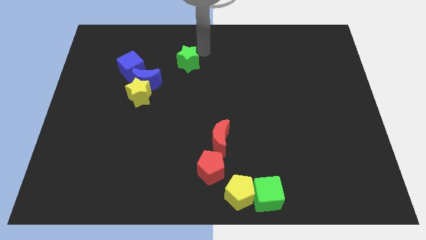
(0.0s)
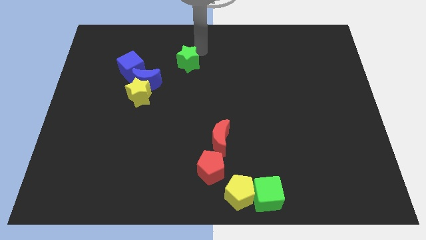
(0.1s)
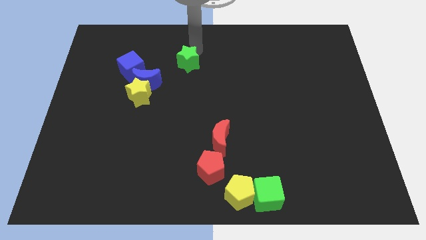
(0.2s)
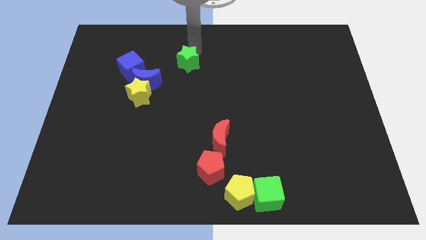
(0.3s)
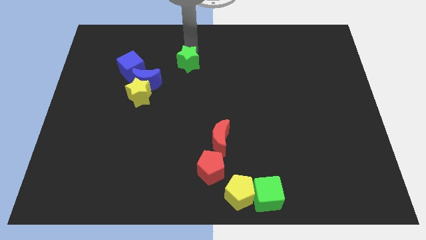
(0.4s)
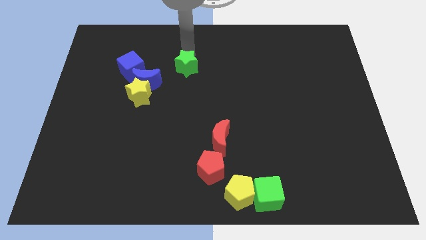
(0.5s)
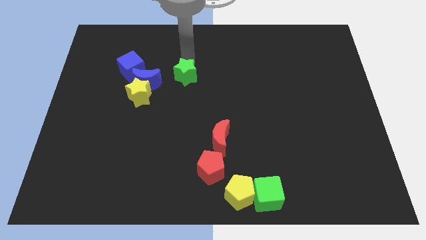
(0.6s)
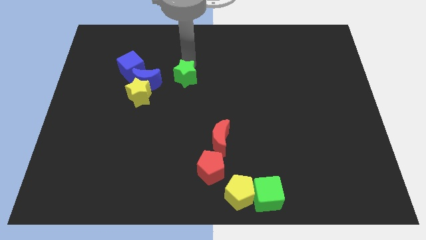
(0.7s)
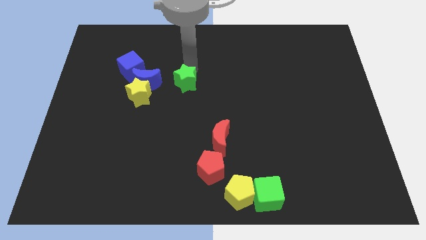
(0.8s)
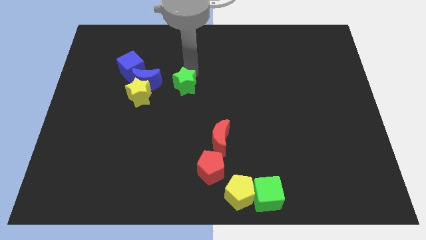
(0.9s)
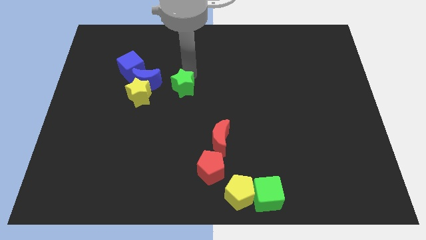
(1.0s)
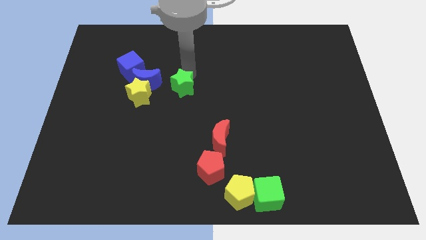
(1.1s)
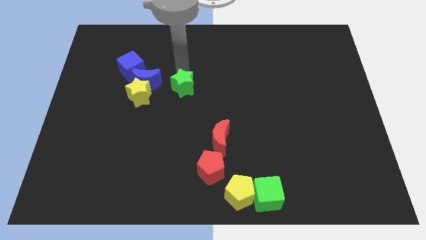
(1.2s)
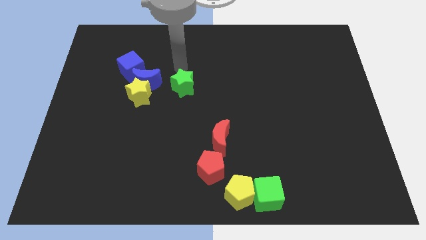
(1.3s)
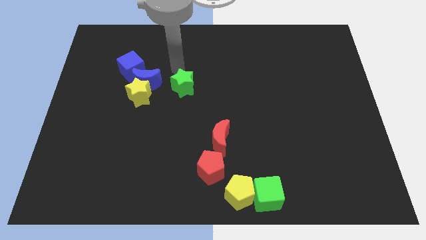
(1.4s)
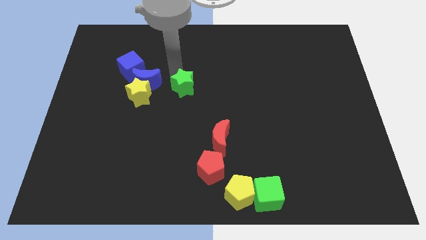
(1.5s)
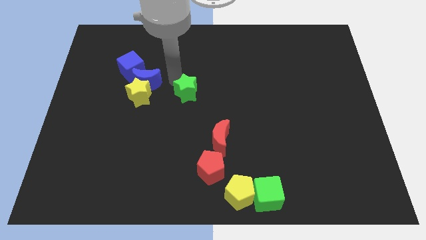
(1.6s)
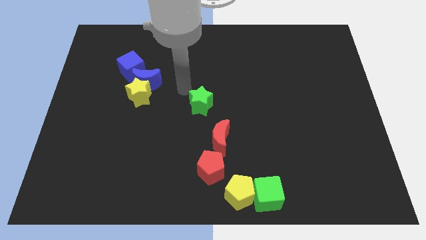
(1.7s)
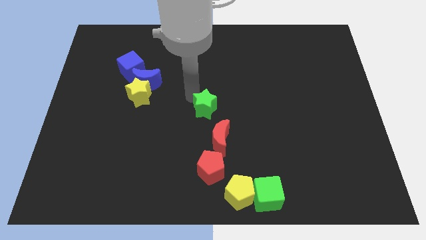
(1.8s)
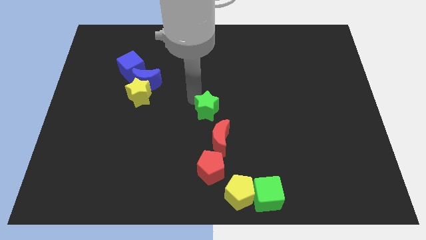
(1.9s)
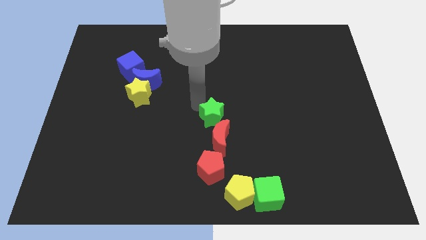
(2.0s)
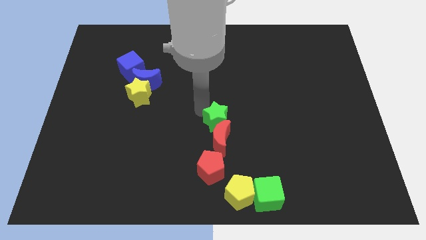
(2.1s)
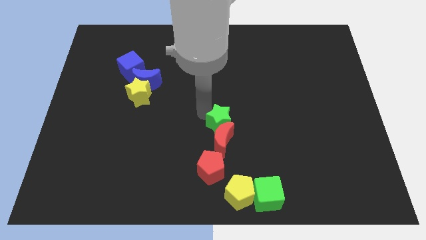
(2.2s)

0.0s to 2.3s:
move green star into top of the red moon

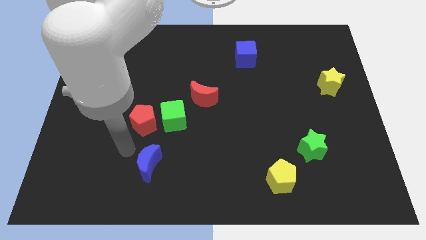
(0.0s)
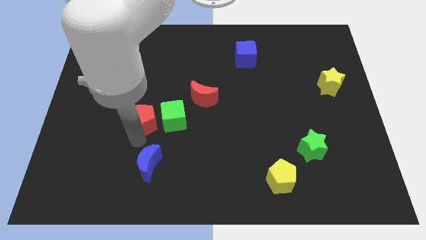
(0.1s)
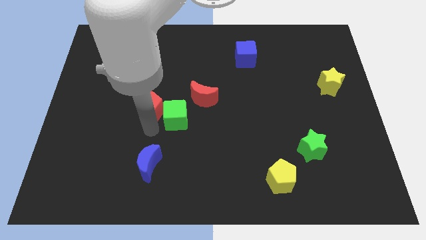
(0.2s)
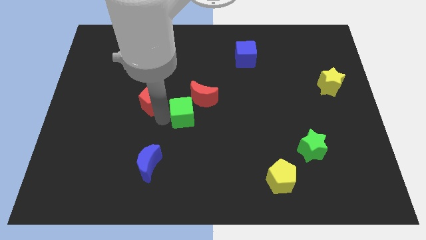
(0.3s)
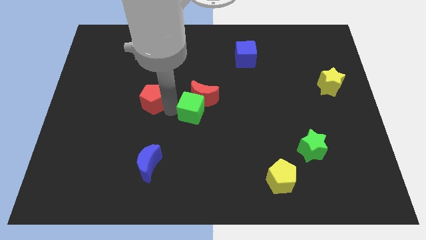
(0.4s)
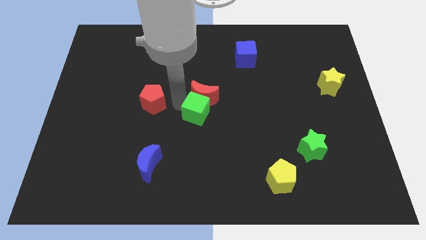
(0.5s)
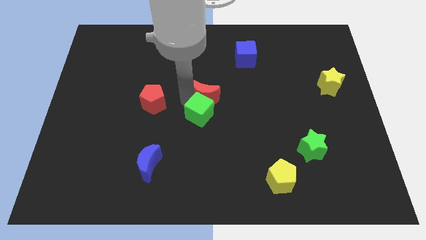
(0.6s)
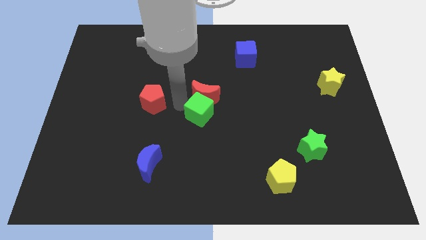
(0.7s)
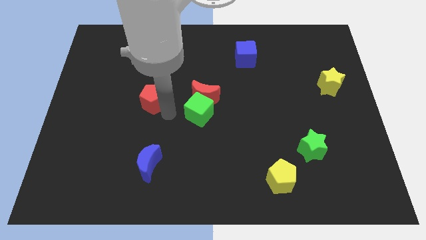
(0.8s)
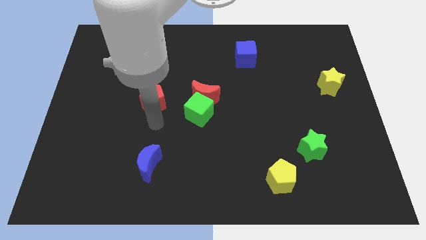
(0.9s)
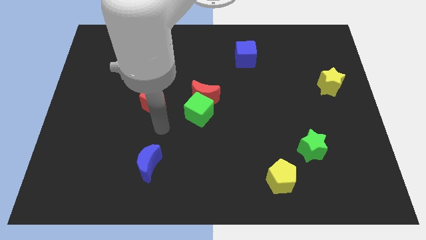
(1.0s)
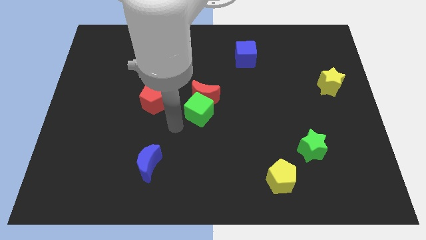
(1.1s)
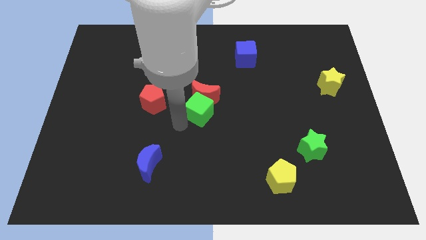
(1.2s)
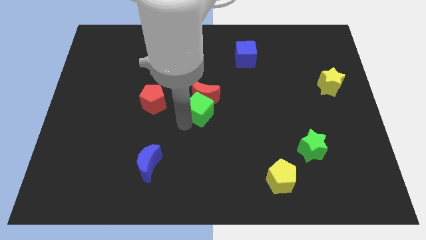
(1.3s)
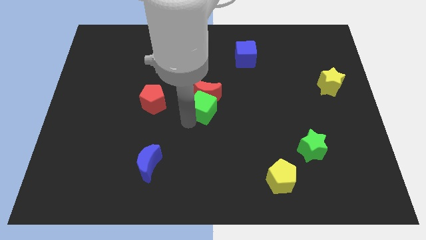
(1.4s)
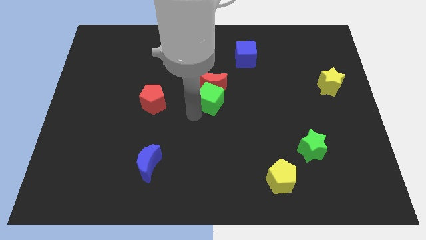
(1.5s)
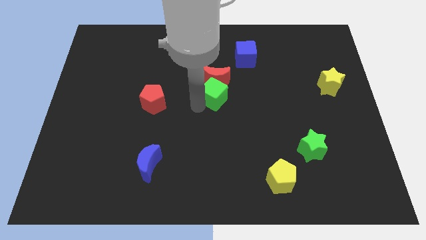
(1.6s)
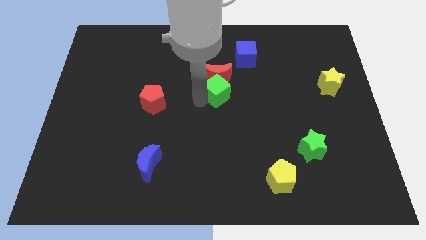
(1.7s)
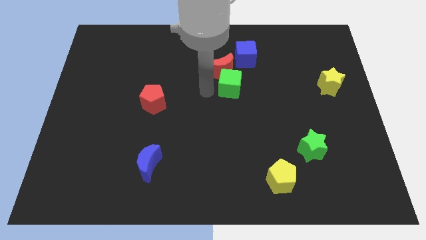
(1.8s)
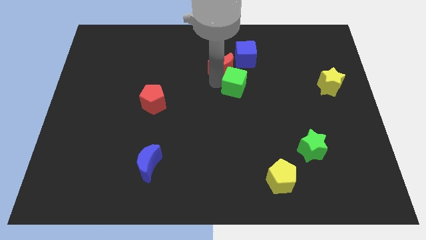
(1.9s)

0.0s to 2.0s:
place the red moon and green cube to the bottom left of the blue cube

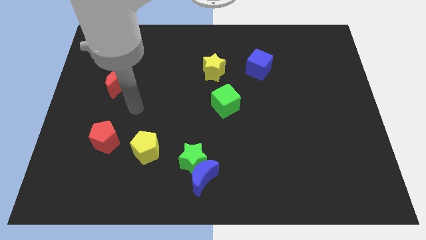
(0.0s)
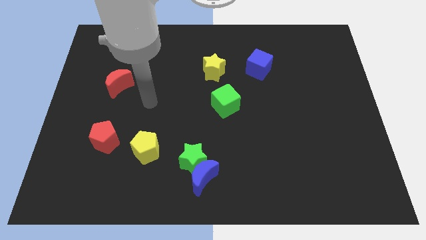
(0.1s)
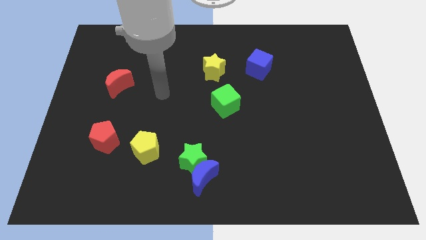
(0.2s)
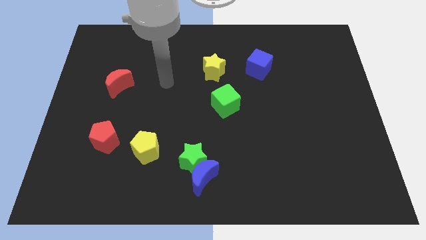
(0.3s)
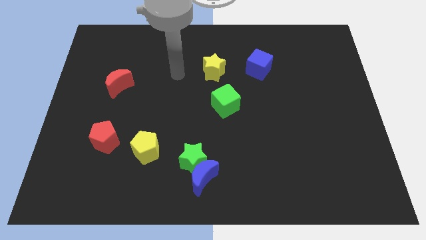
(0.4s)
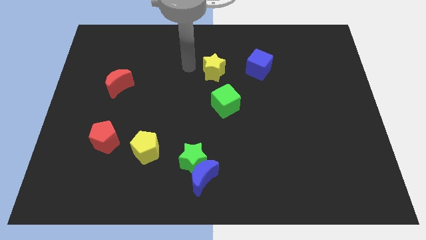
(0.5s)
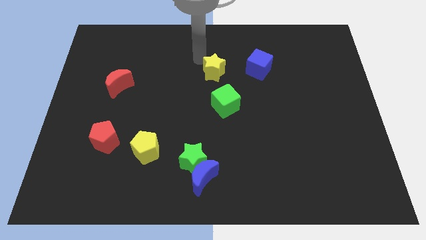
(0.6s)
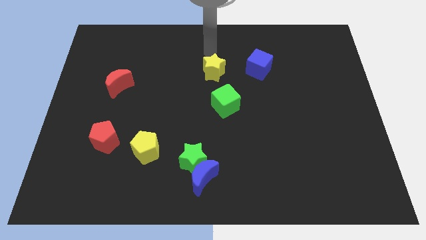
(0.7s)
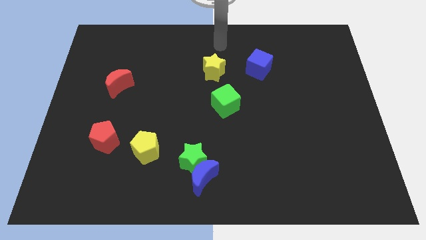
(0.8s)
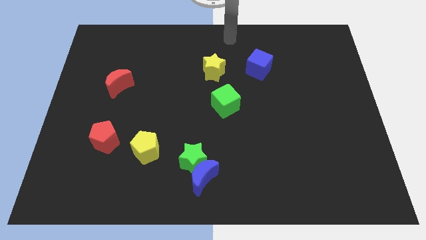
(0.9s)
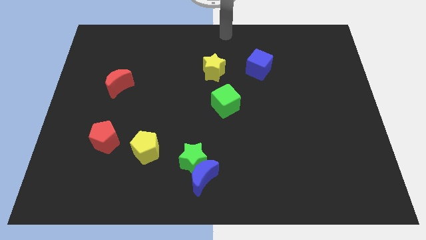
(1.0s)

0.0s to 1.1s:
move your arm to the top side of the table

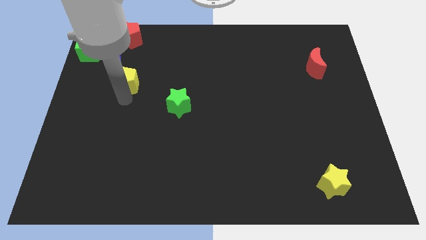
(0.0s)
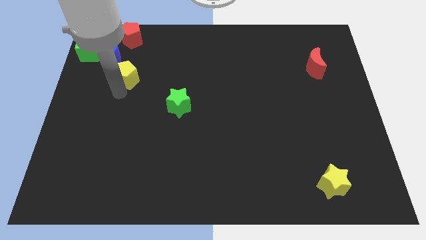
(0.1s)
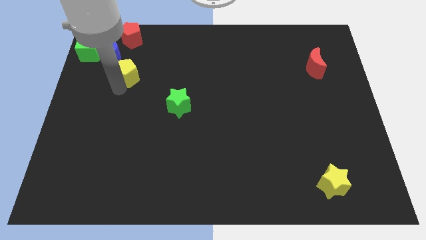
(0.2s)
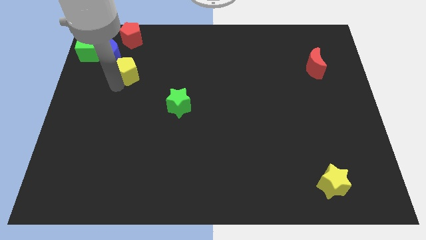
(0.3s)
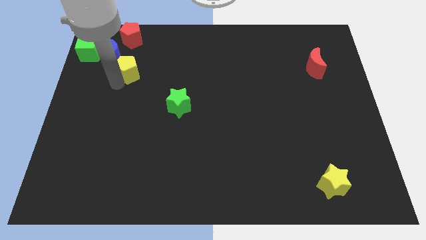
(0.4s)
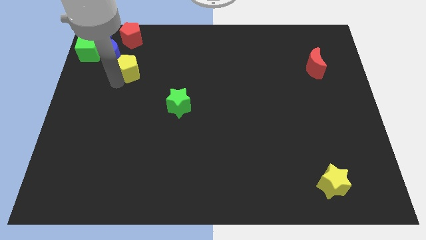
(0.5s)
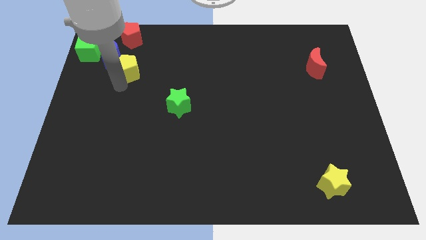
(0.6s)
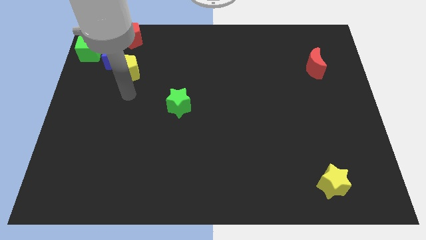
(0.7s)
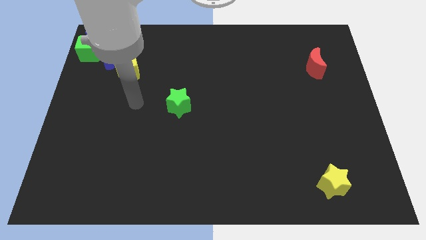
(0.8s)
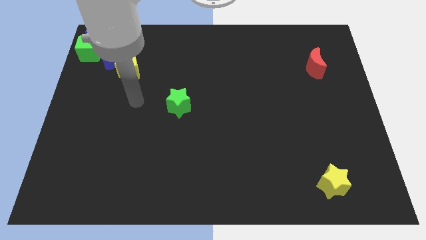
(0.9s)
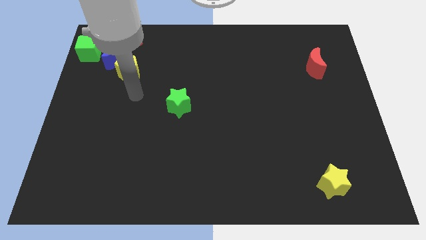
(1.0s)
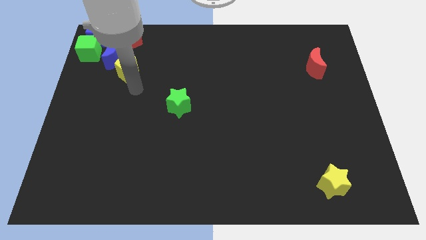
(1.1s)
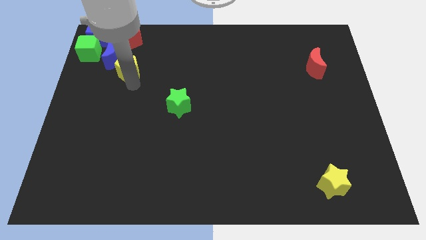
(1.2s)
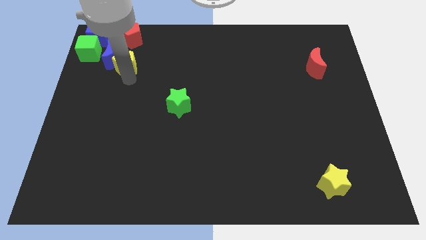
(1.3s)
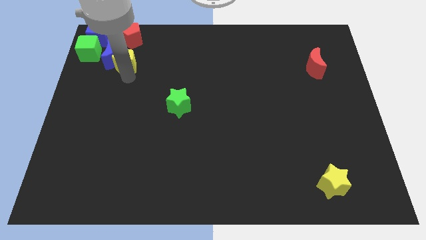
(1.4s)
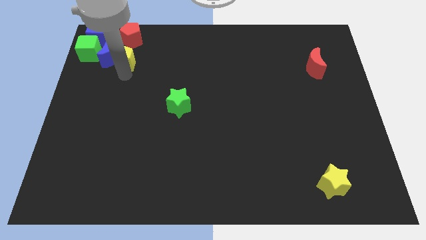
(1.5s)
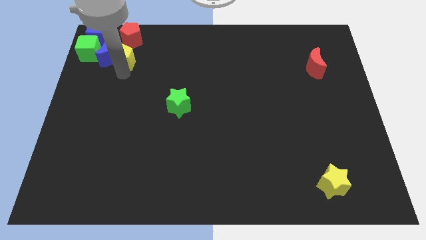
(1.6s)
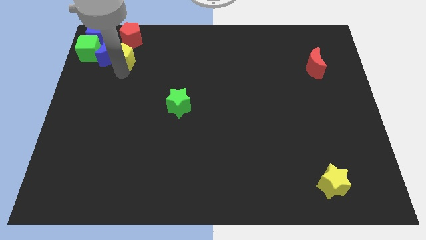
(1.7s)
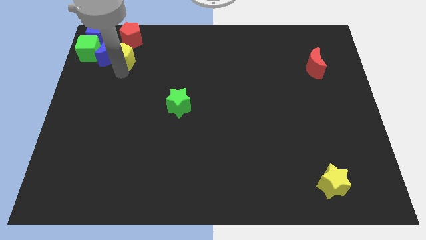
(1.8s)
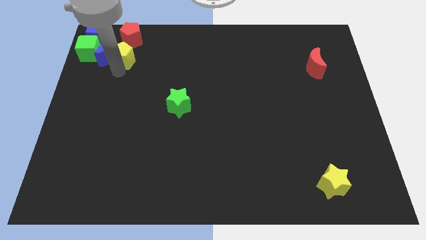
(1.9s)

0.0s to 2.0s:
push the yellow pentagon into the blue moon

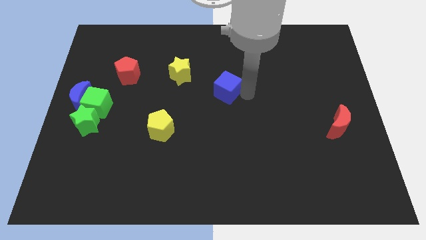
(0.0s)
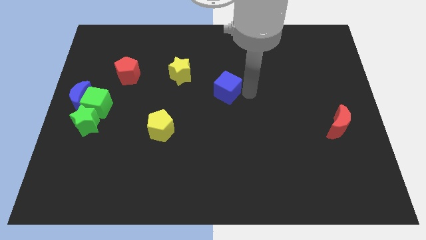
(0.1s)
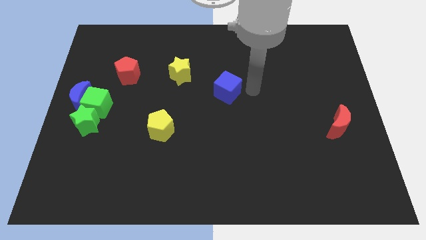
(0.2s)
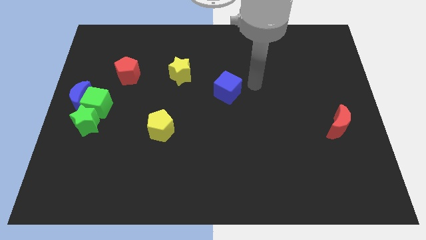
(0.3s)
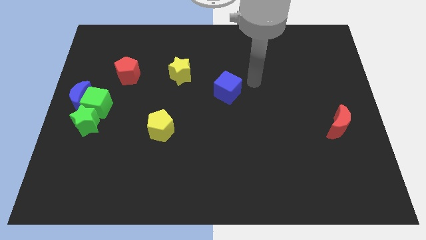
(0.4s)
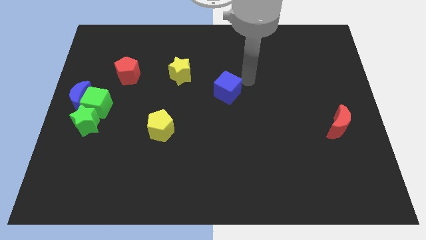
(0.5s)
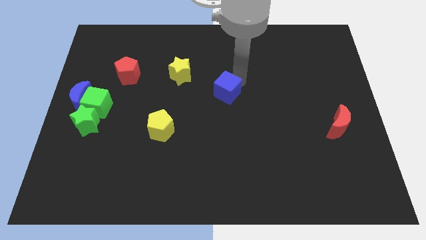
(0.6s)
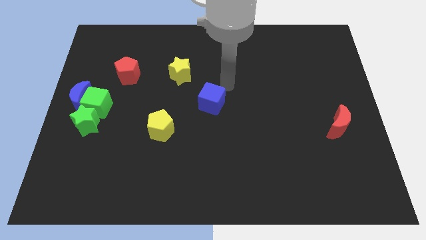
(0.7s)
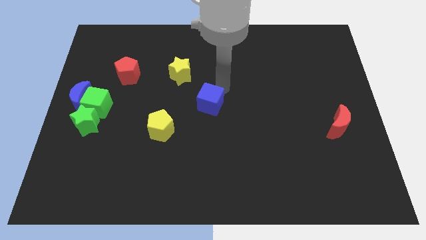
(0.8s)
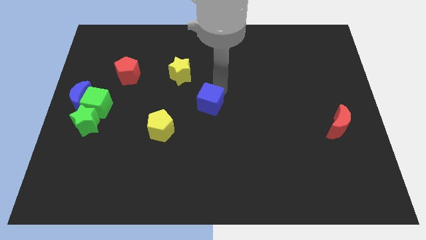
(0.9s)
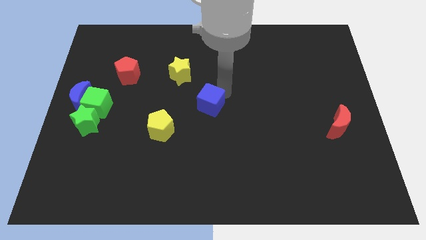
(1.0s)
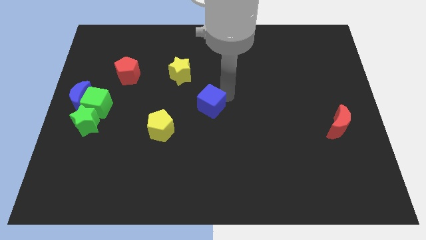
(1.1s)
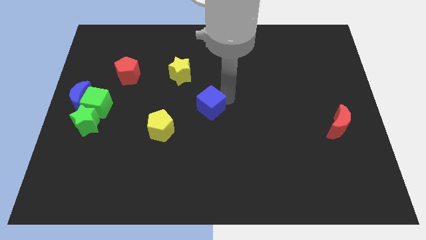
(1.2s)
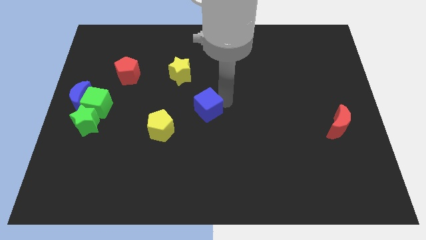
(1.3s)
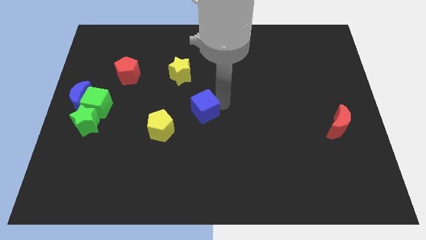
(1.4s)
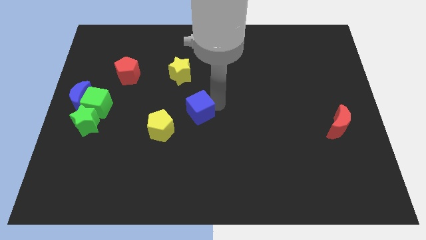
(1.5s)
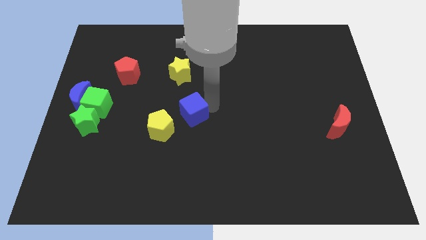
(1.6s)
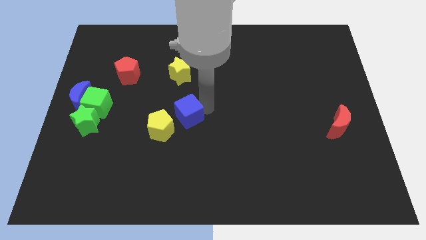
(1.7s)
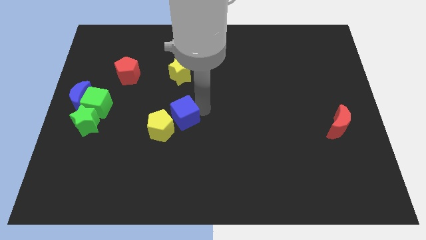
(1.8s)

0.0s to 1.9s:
place the blue cube below the yellow star
